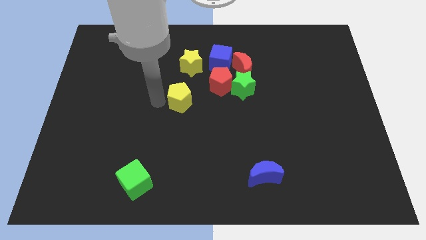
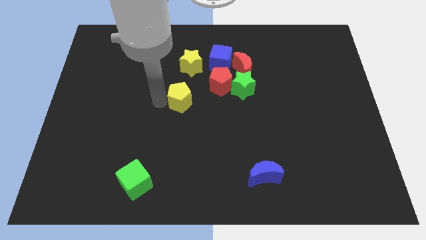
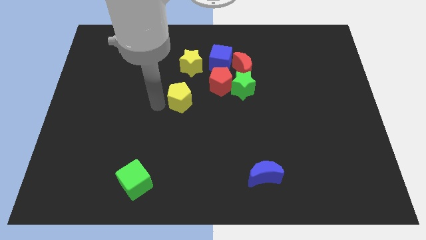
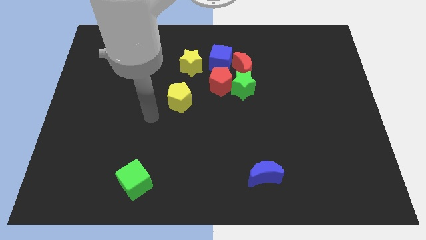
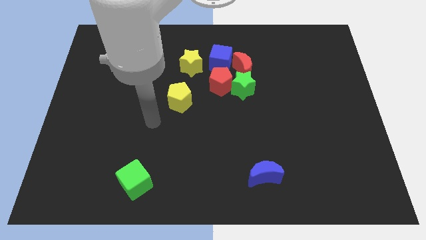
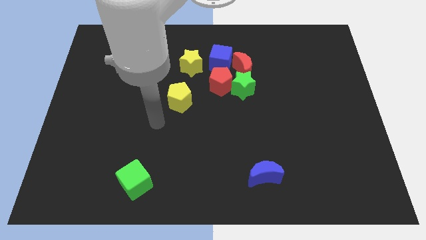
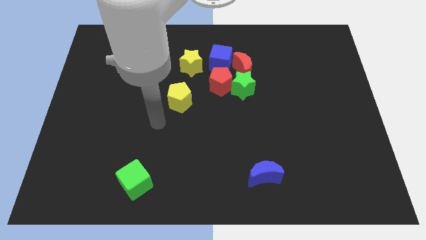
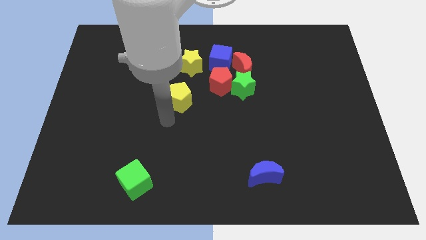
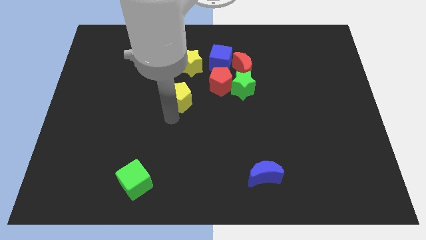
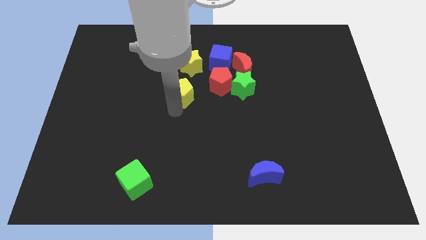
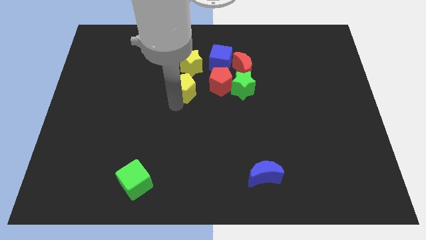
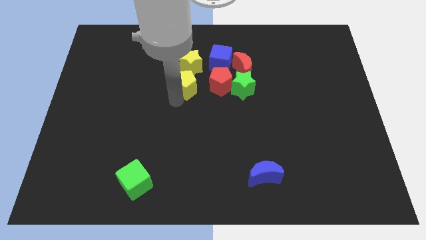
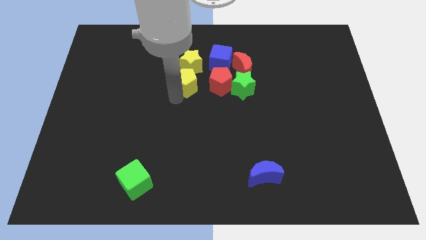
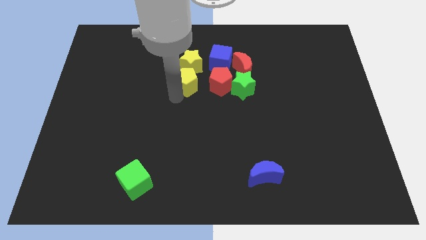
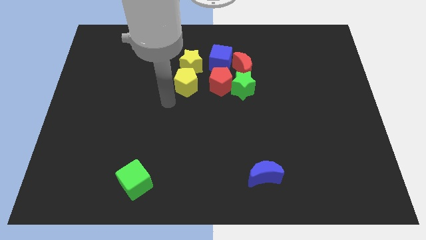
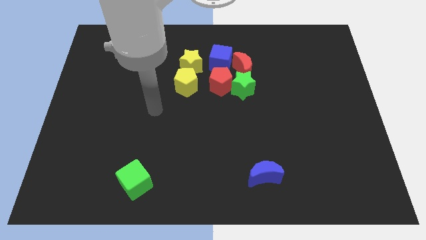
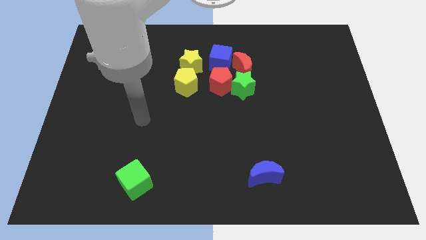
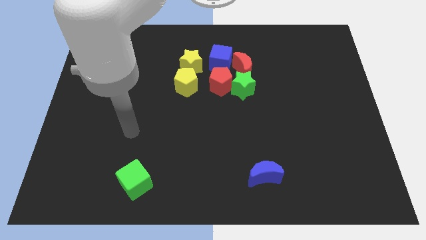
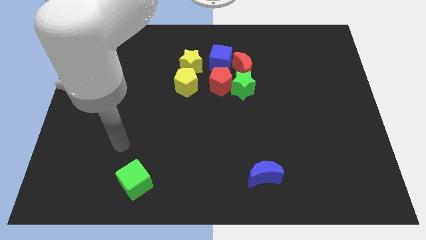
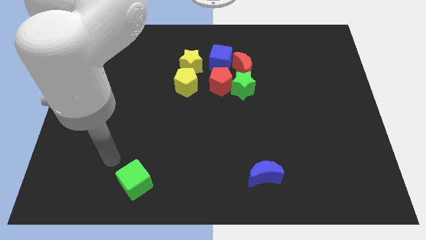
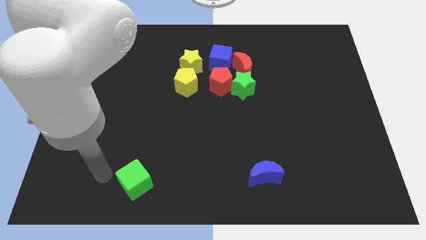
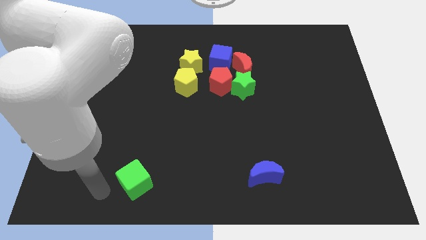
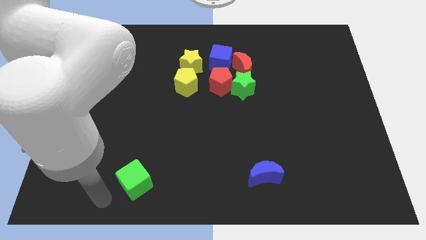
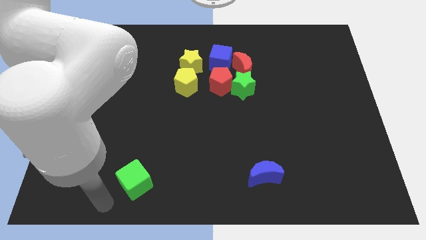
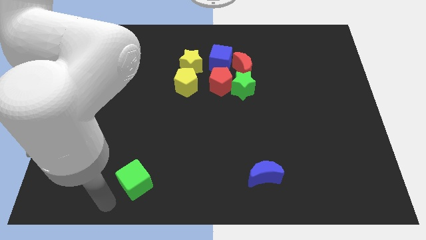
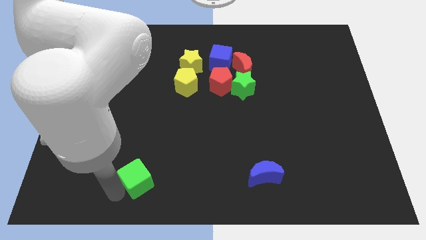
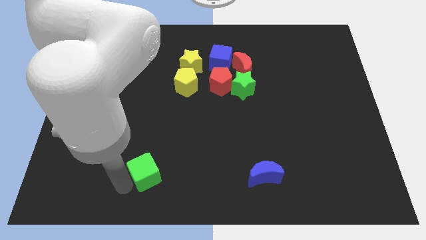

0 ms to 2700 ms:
point your arm below green cube

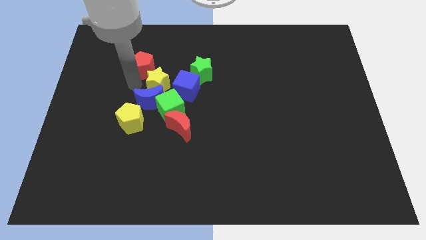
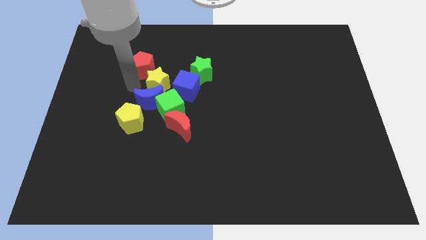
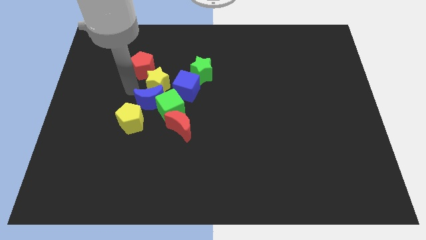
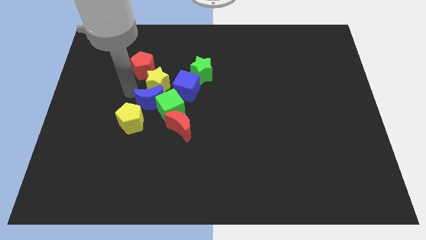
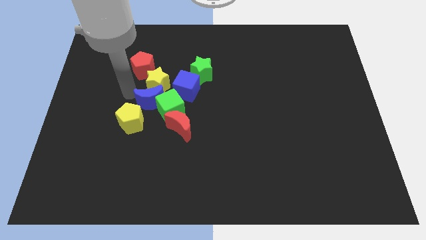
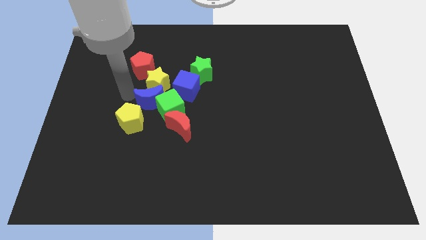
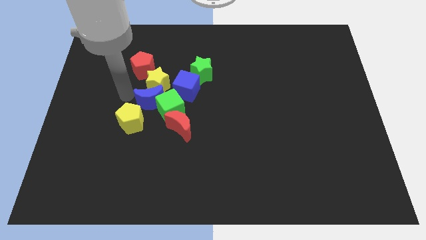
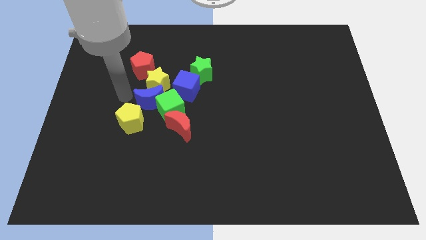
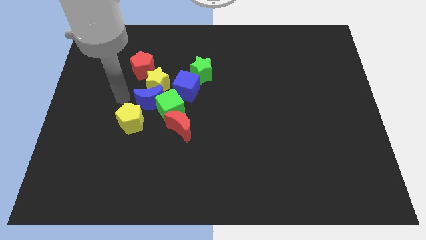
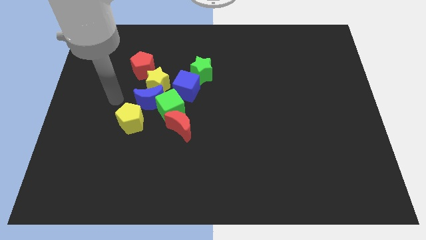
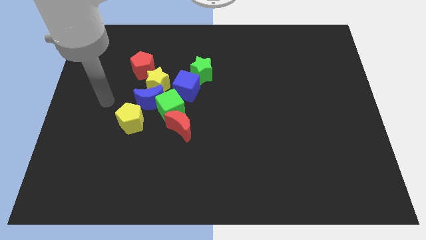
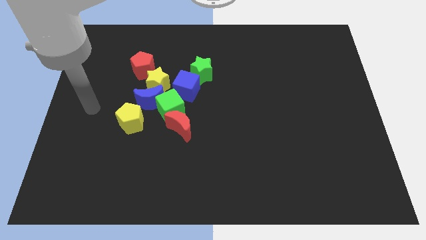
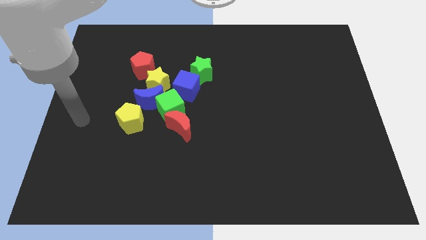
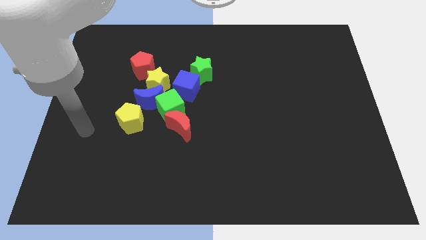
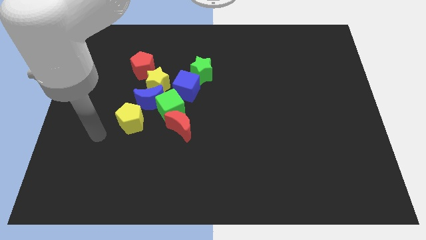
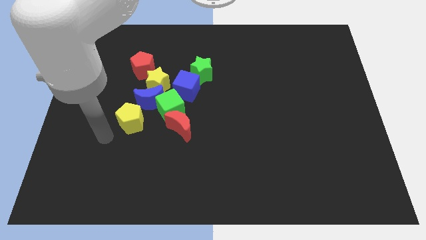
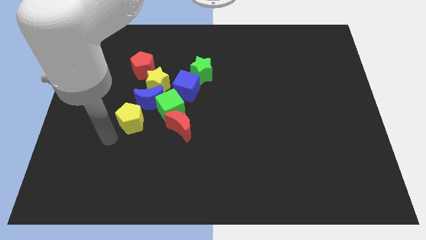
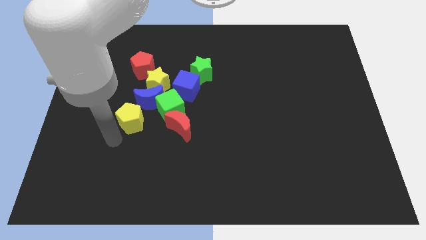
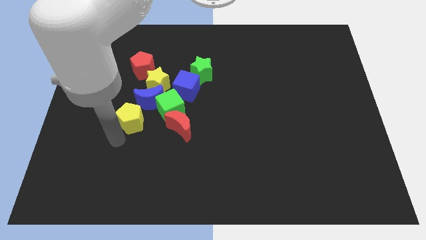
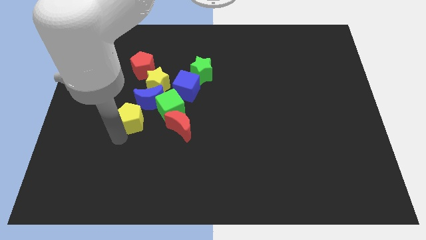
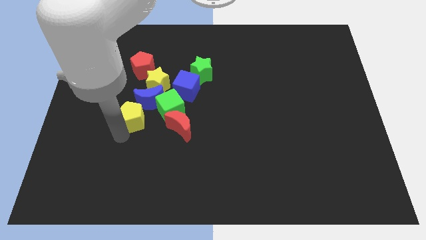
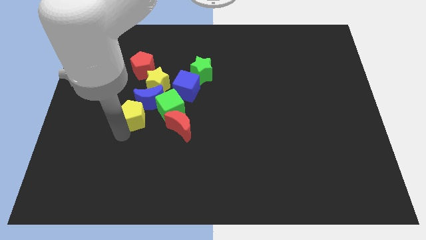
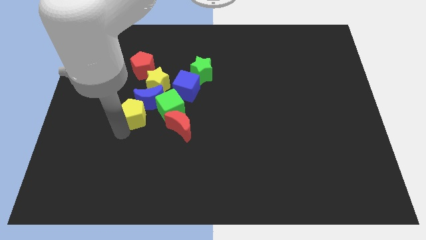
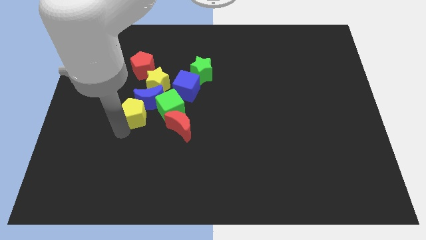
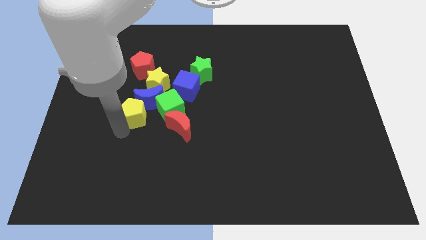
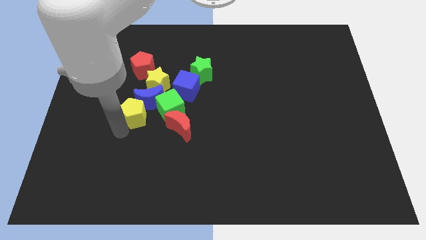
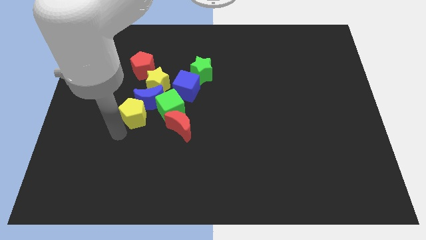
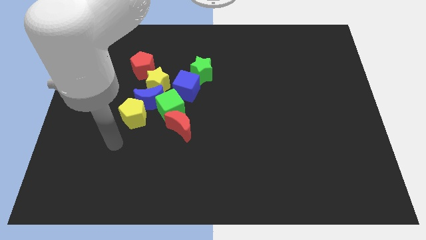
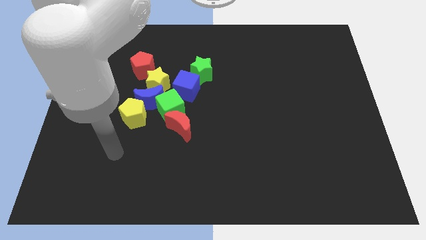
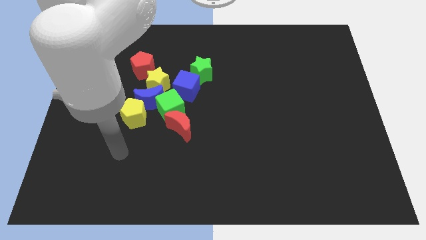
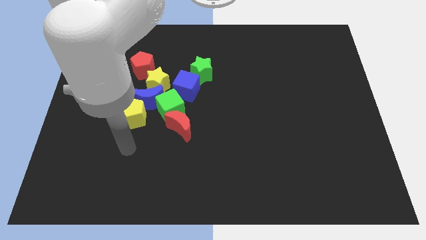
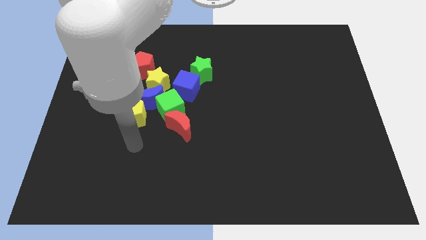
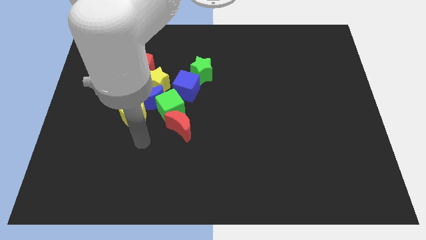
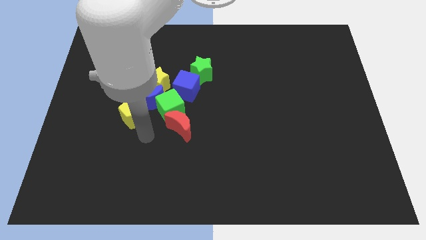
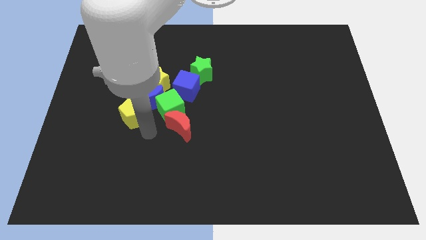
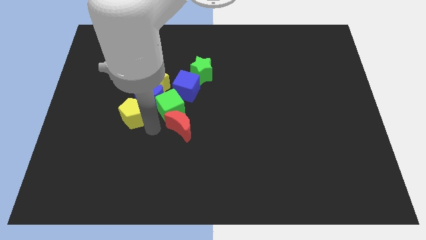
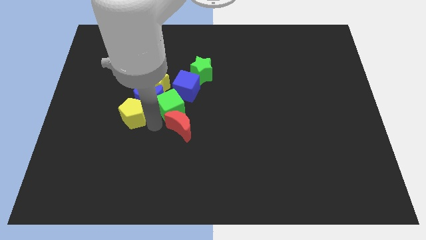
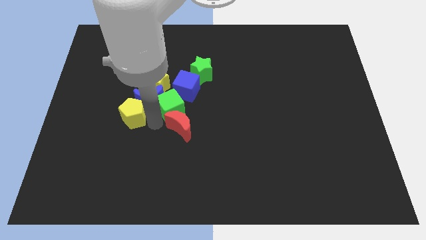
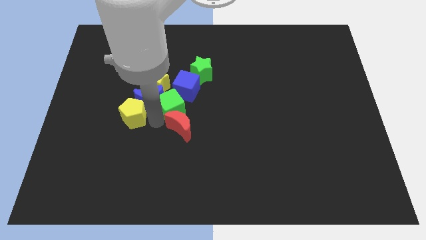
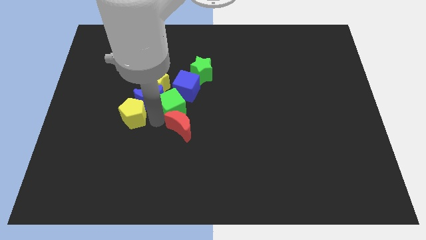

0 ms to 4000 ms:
place your hand in between the yellow pentagon and green cube

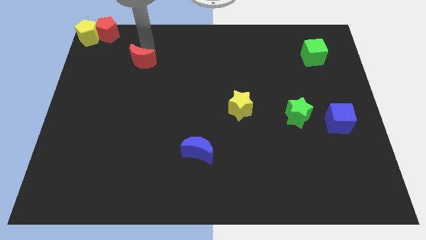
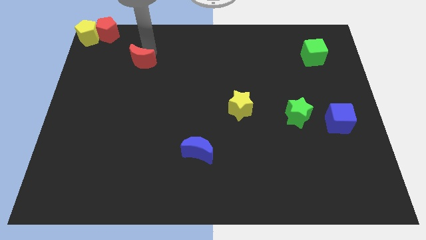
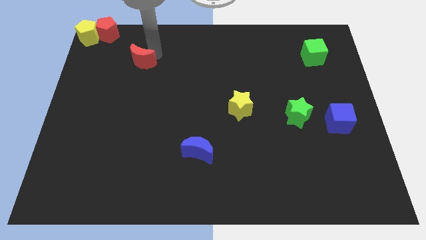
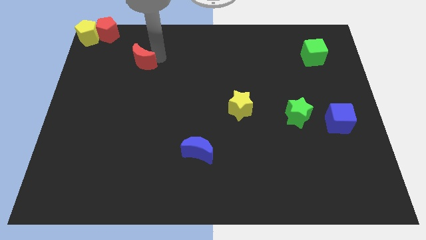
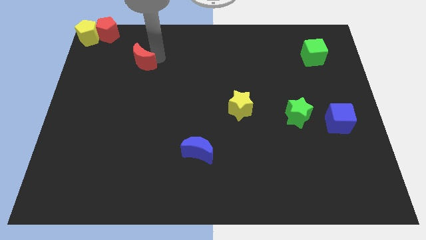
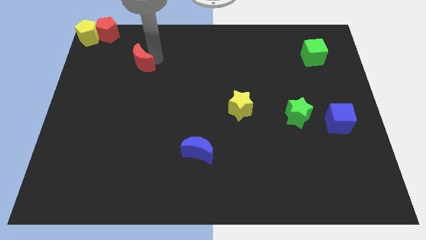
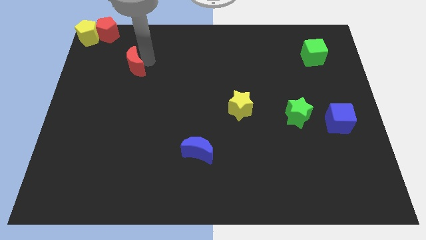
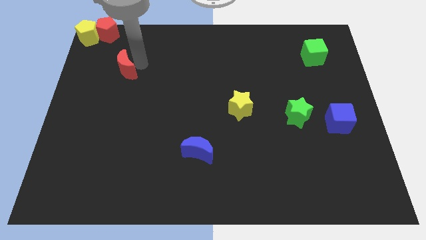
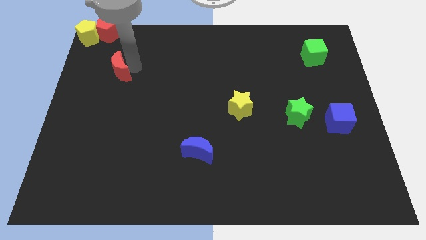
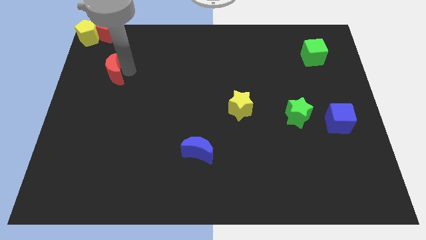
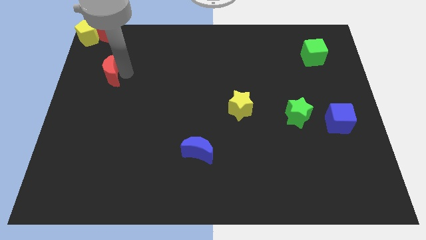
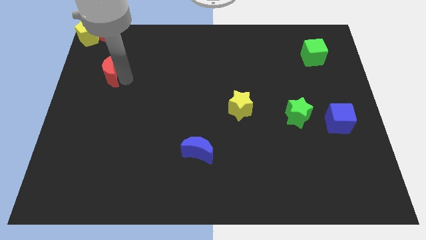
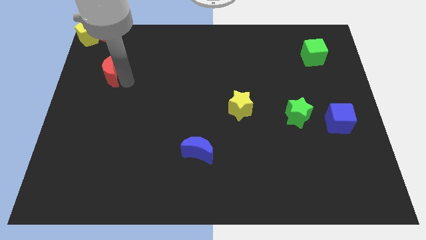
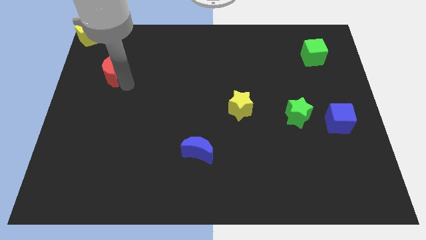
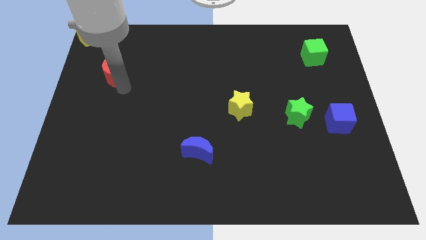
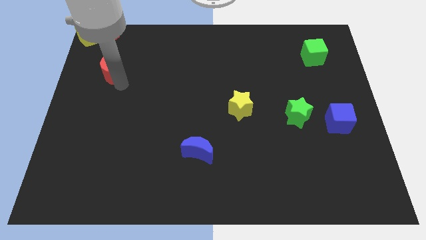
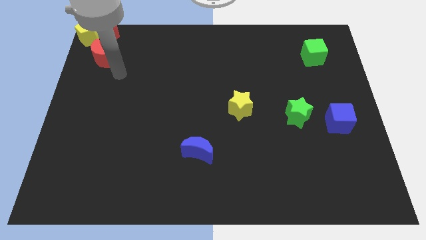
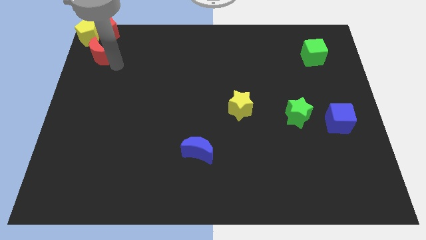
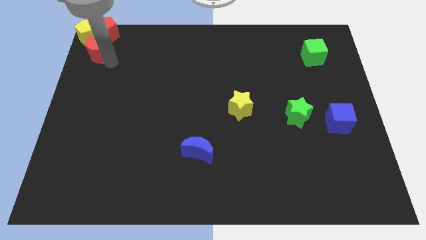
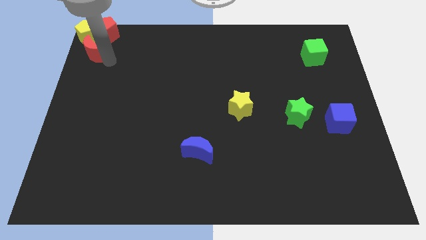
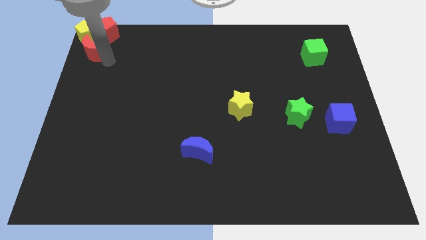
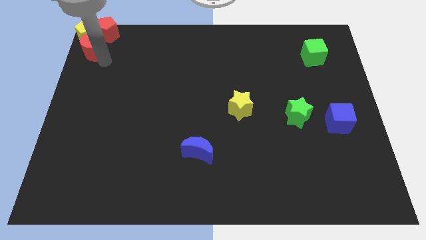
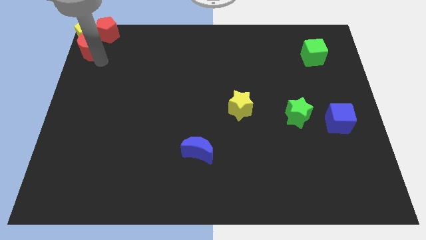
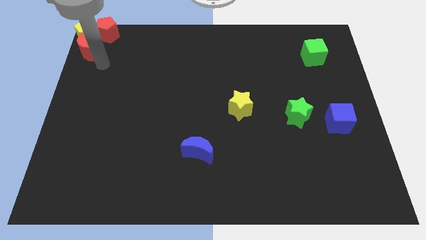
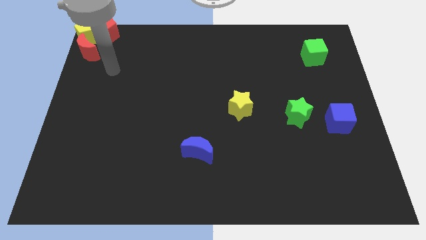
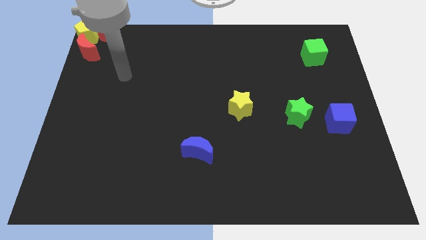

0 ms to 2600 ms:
move the red crescent to the bottom of the yellow pentagon
